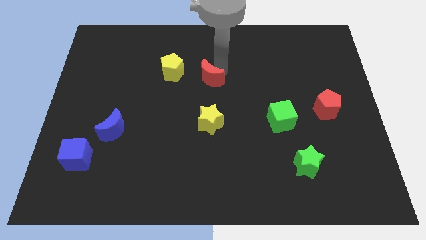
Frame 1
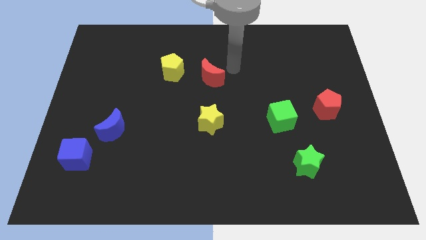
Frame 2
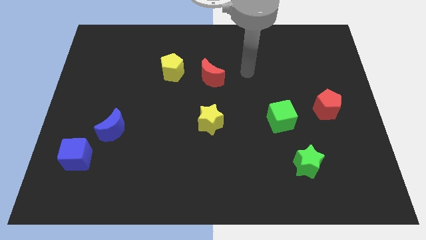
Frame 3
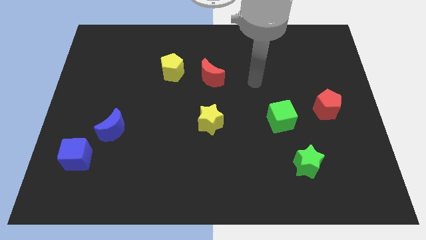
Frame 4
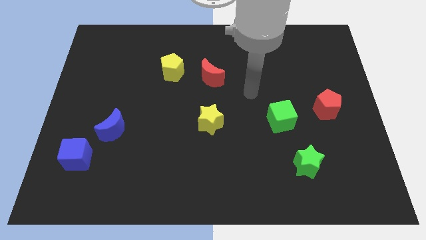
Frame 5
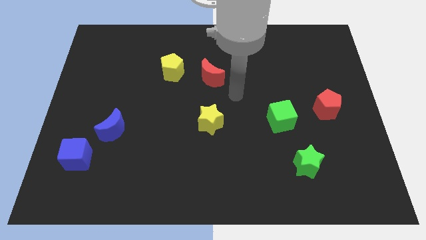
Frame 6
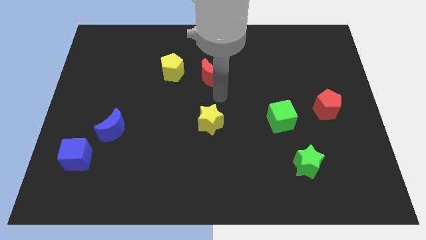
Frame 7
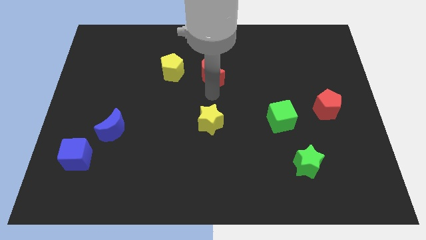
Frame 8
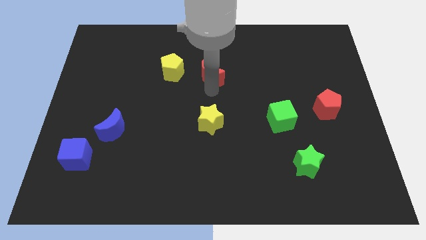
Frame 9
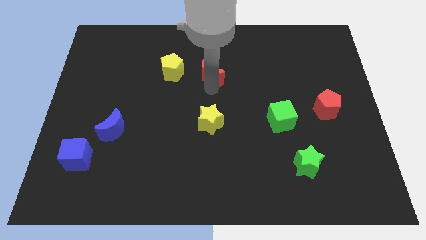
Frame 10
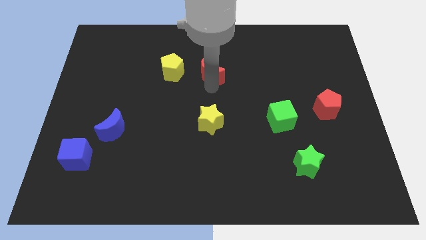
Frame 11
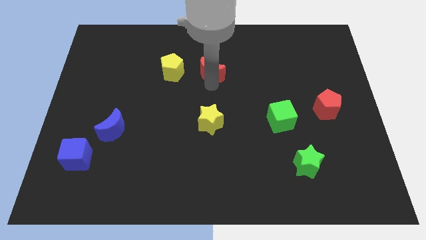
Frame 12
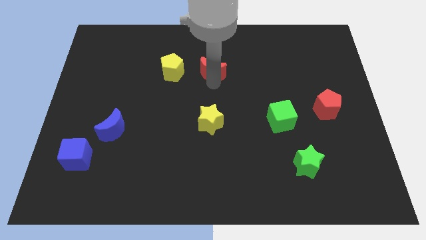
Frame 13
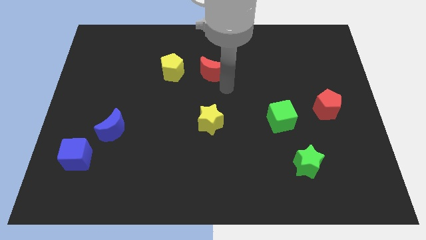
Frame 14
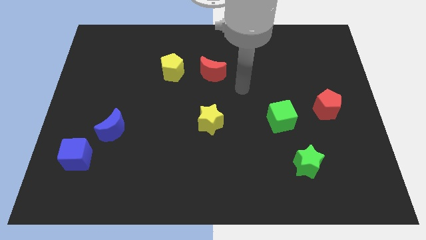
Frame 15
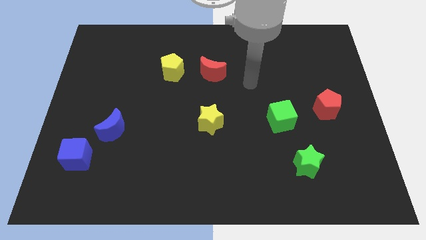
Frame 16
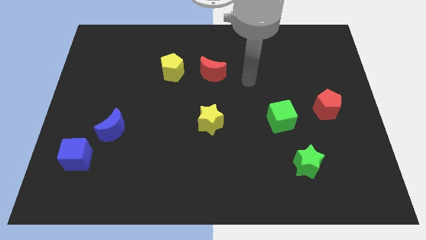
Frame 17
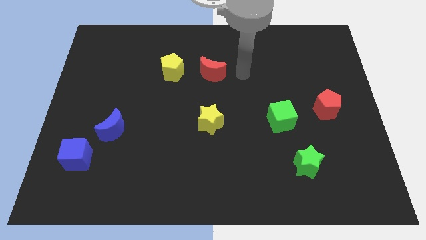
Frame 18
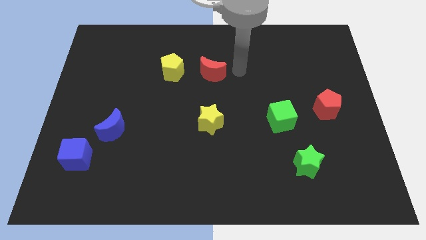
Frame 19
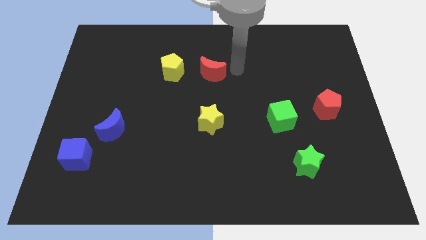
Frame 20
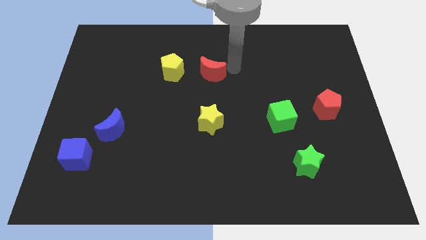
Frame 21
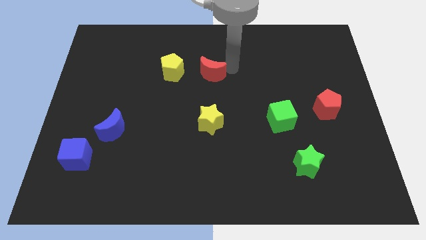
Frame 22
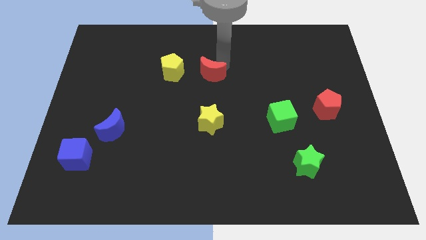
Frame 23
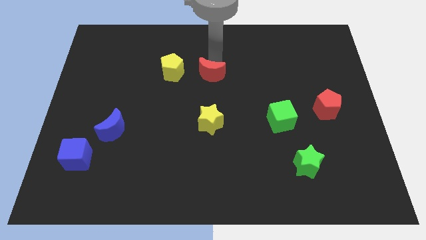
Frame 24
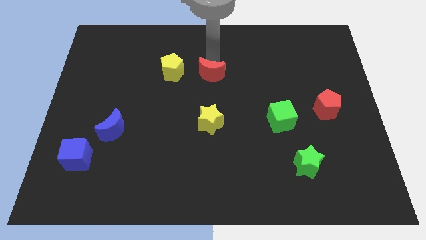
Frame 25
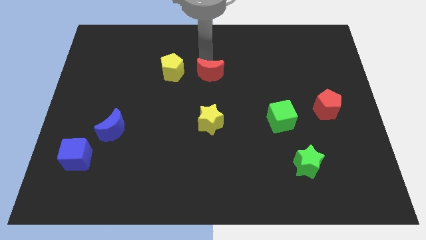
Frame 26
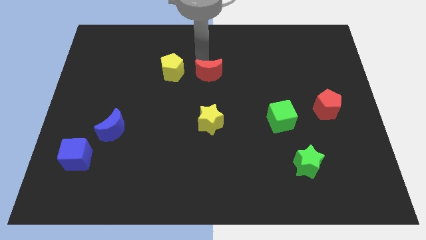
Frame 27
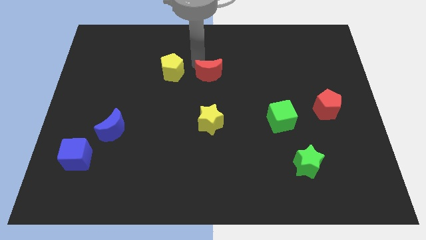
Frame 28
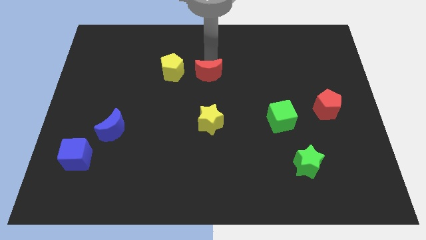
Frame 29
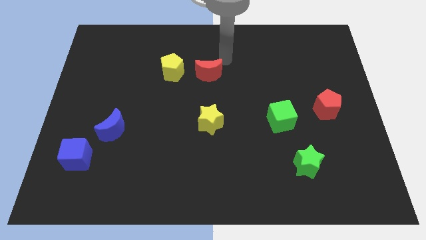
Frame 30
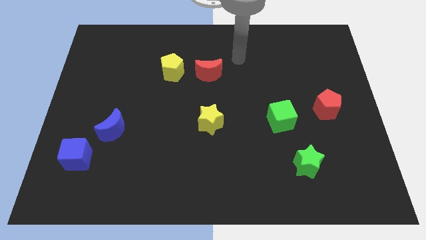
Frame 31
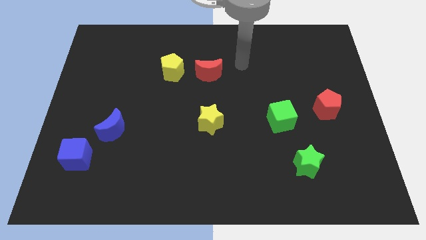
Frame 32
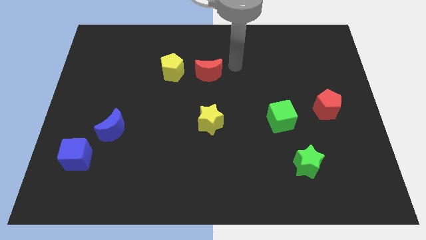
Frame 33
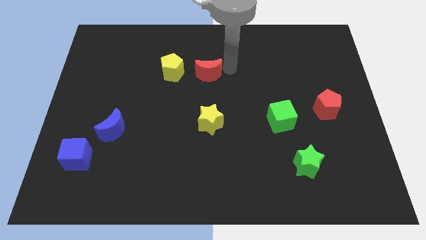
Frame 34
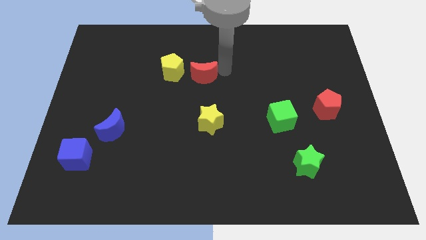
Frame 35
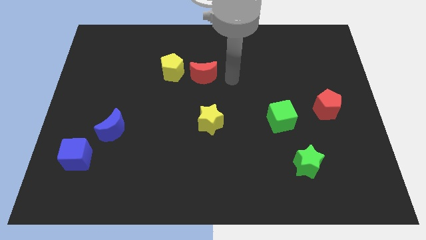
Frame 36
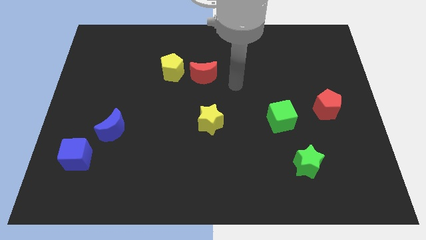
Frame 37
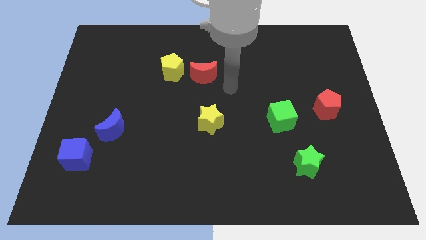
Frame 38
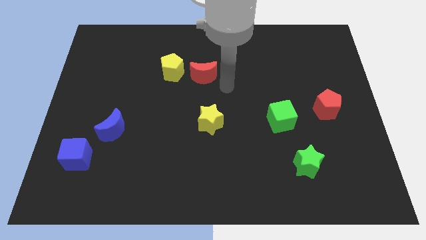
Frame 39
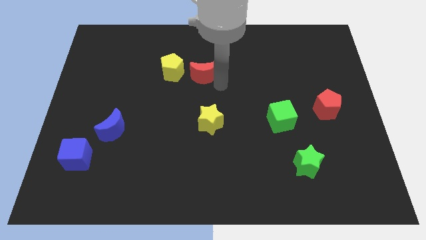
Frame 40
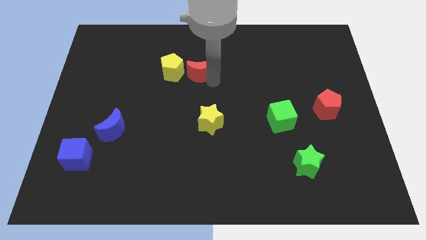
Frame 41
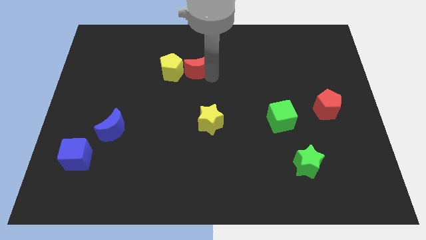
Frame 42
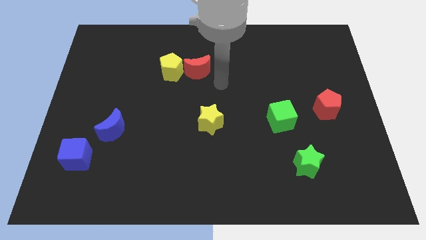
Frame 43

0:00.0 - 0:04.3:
move the red crescent into the right side of the yellow pentagon

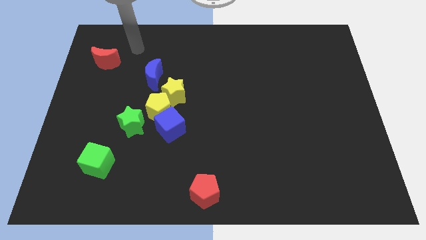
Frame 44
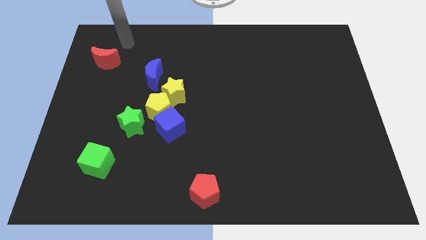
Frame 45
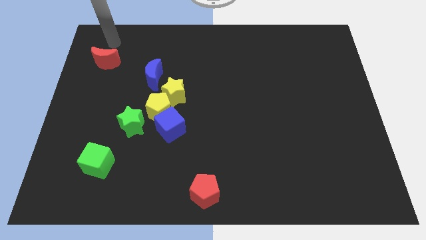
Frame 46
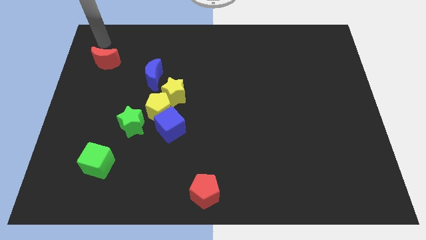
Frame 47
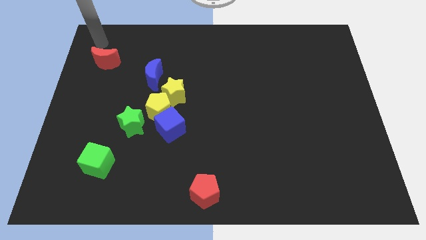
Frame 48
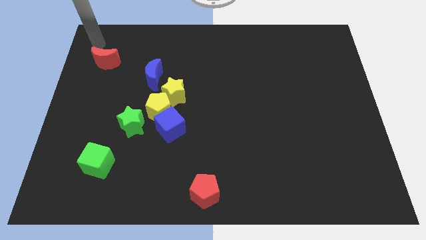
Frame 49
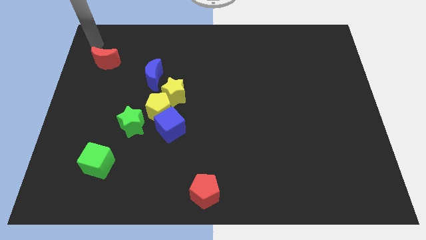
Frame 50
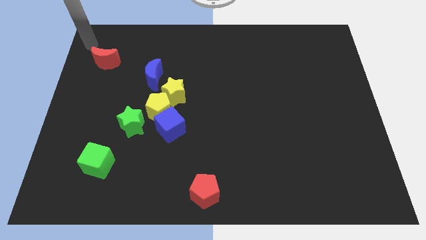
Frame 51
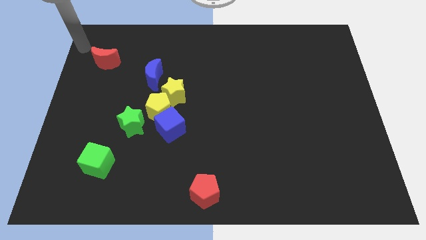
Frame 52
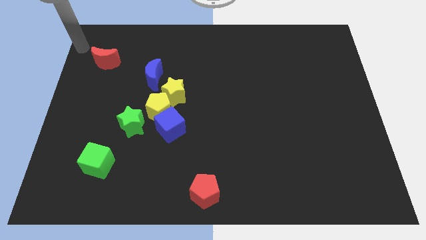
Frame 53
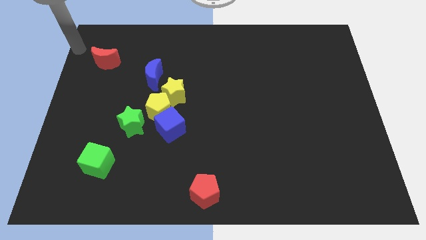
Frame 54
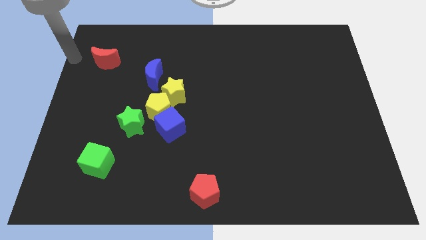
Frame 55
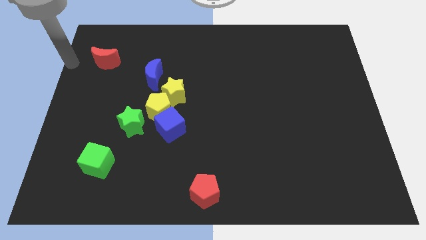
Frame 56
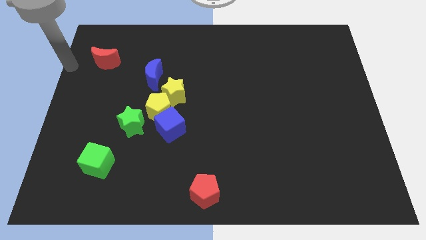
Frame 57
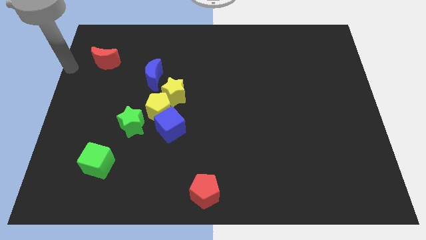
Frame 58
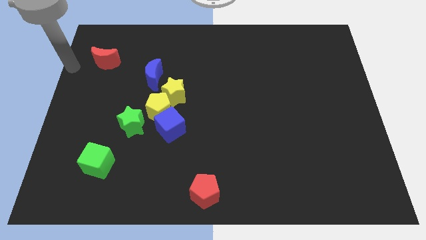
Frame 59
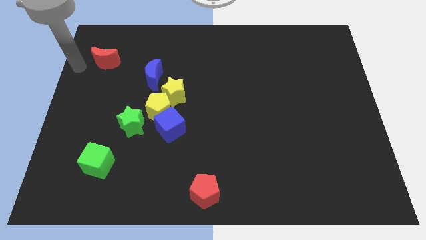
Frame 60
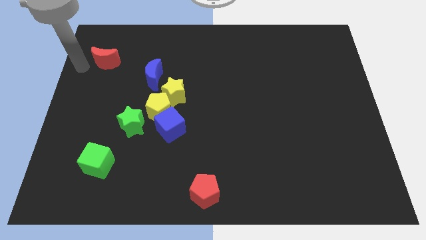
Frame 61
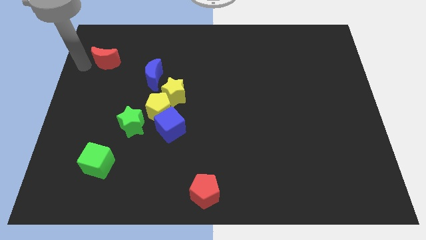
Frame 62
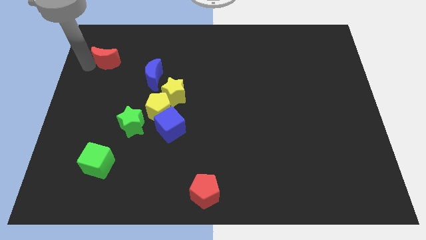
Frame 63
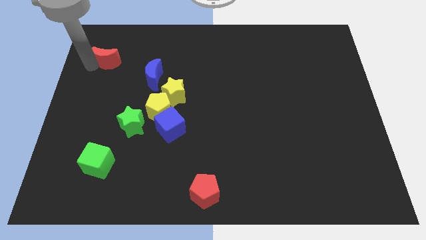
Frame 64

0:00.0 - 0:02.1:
touch the bottom of red moon

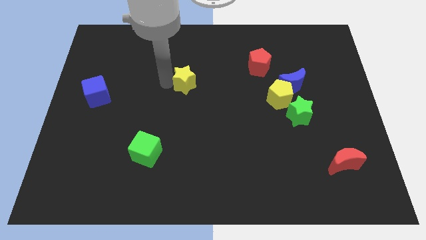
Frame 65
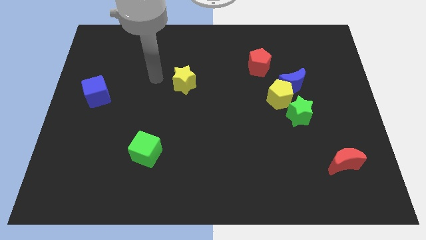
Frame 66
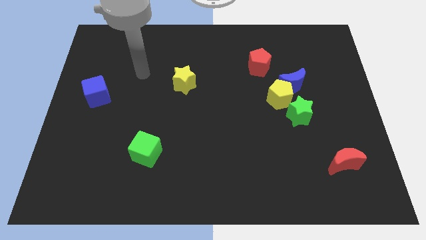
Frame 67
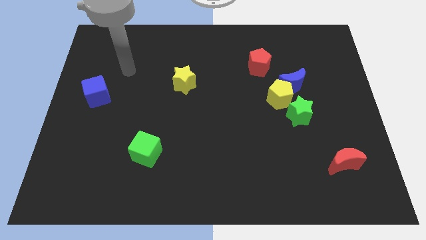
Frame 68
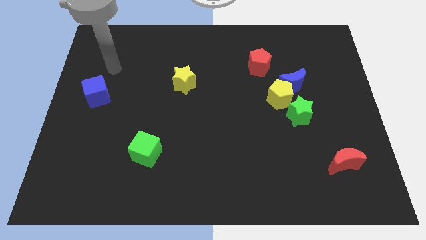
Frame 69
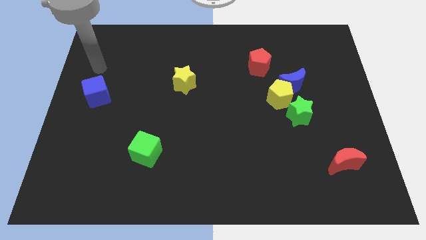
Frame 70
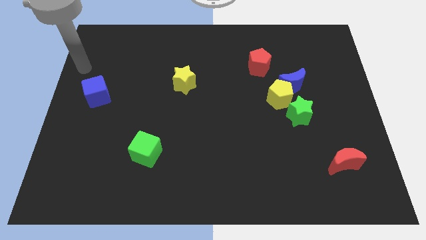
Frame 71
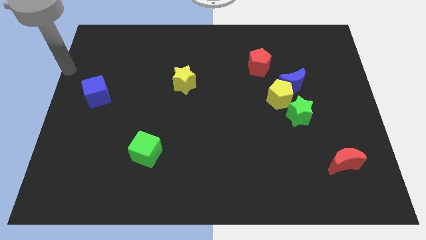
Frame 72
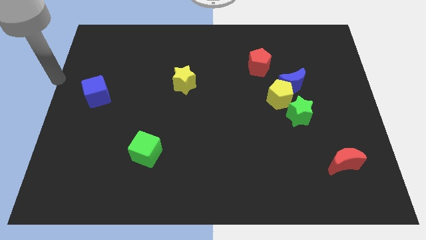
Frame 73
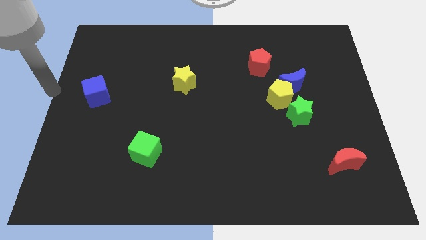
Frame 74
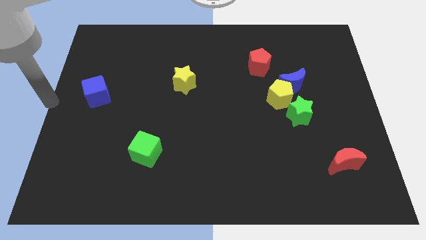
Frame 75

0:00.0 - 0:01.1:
move your arm to the left center of the board

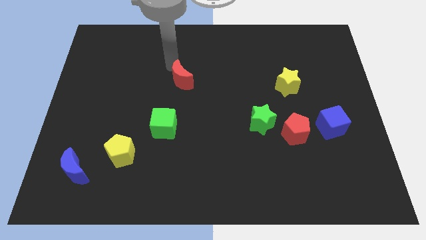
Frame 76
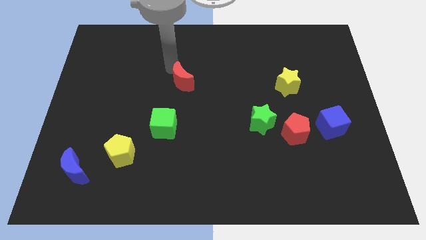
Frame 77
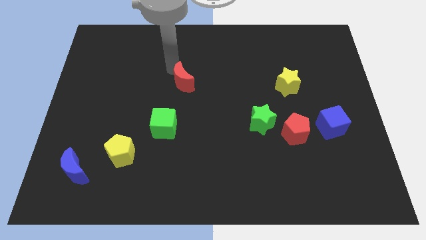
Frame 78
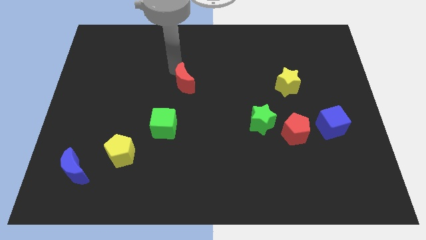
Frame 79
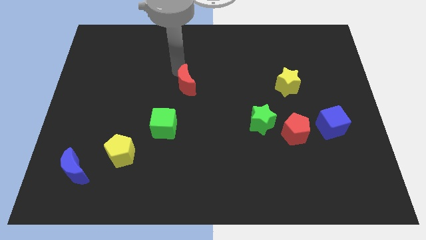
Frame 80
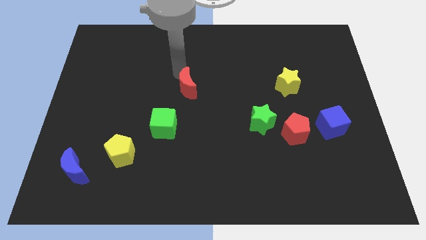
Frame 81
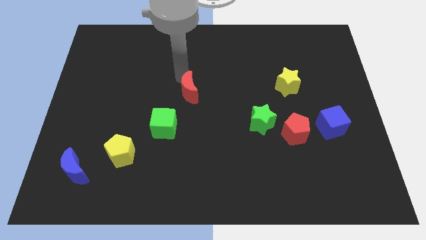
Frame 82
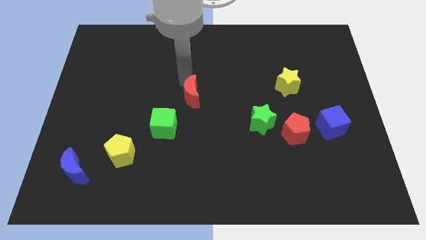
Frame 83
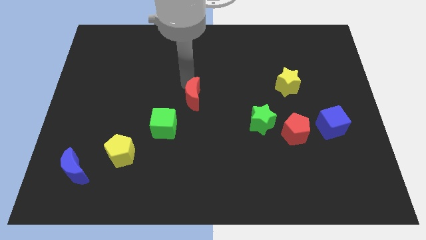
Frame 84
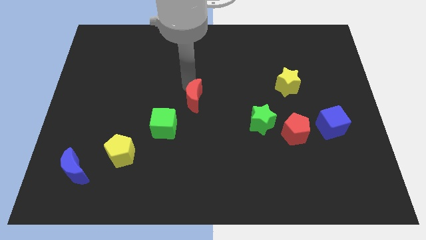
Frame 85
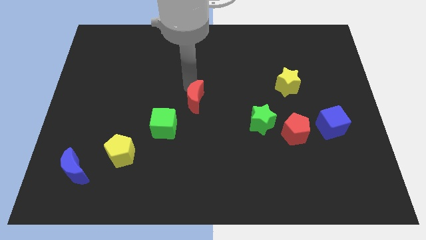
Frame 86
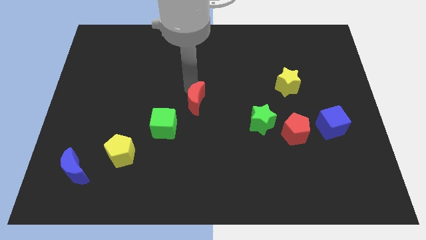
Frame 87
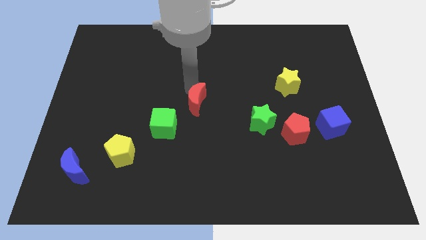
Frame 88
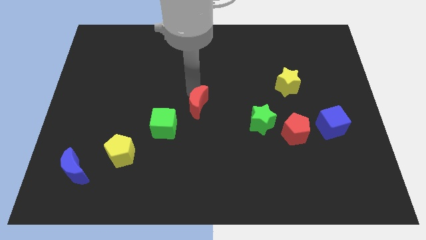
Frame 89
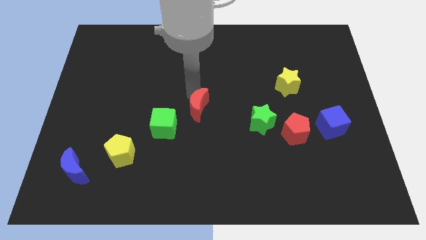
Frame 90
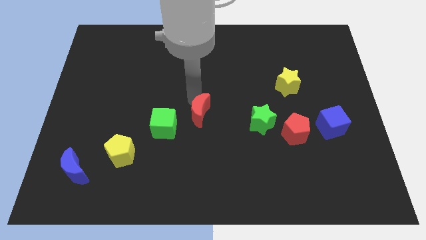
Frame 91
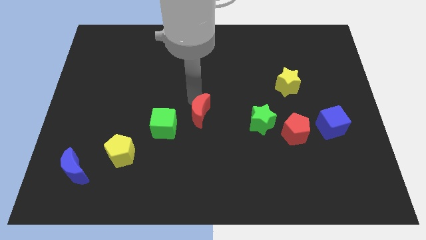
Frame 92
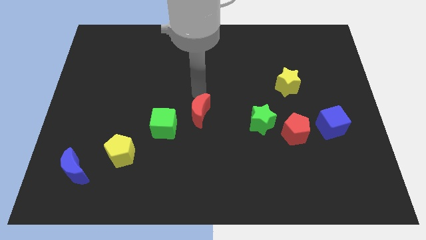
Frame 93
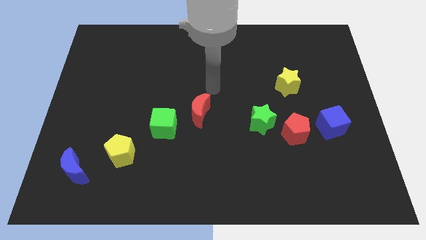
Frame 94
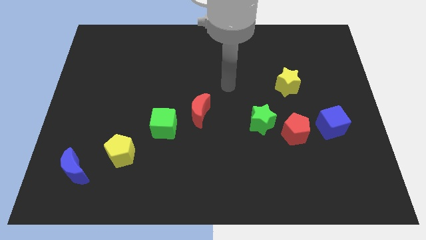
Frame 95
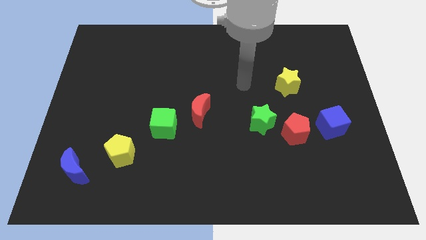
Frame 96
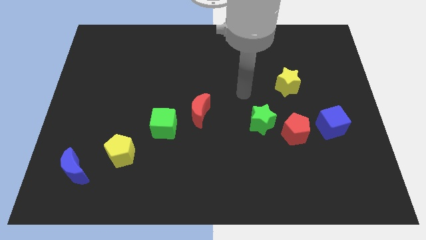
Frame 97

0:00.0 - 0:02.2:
place the red moon to the right of the green cube
